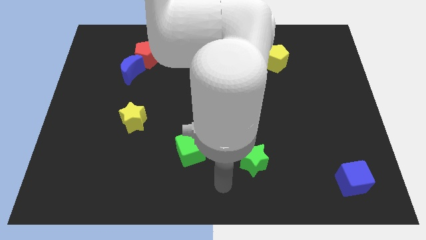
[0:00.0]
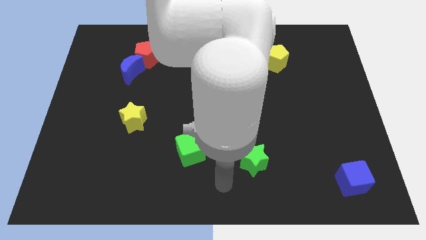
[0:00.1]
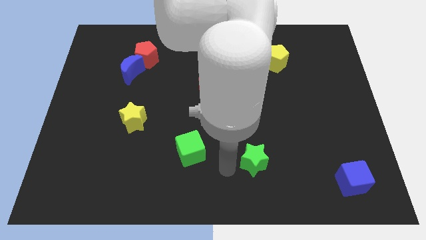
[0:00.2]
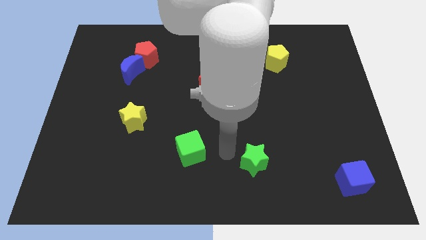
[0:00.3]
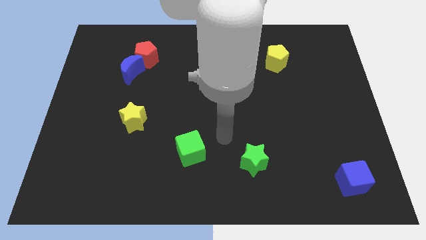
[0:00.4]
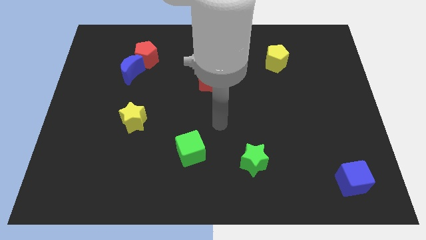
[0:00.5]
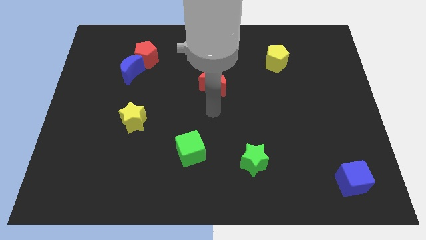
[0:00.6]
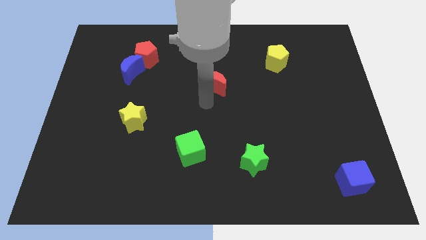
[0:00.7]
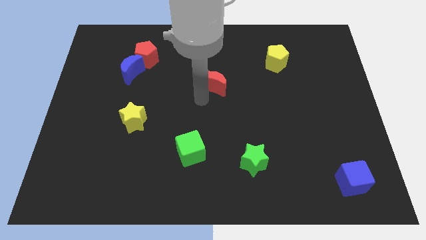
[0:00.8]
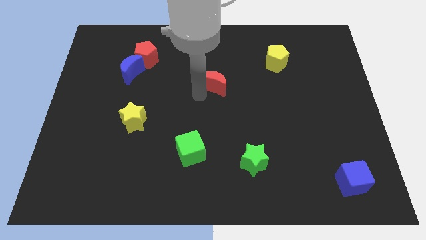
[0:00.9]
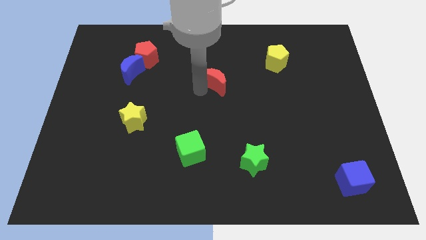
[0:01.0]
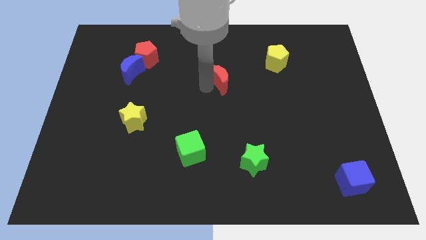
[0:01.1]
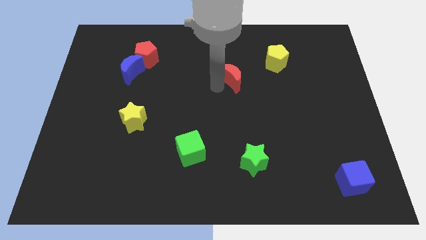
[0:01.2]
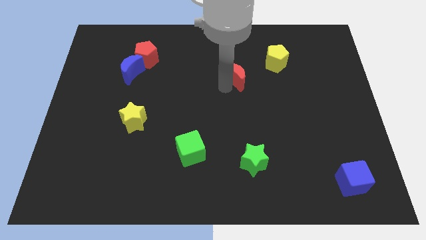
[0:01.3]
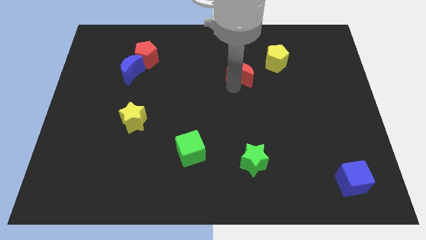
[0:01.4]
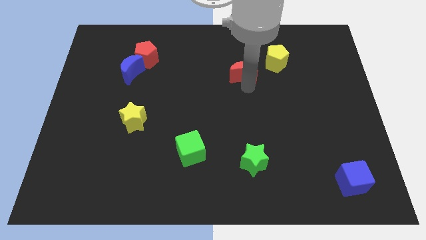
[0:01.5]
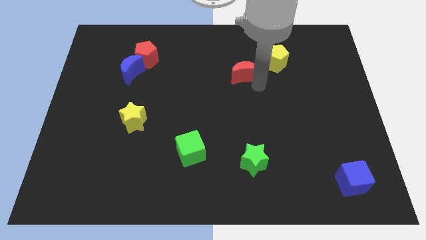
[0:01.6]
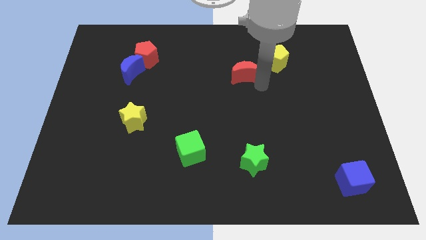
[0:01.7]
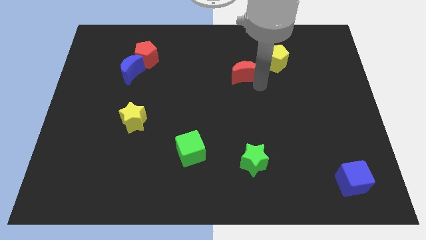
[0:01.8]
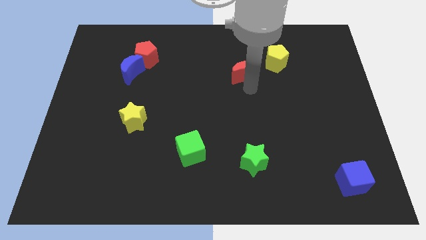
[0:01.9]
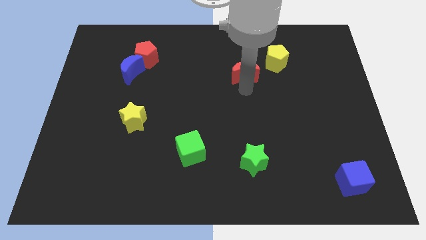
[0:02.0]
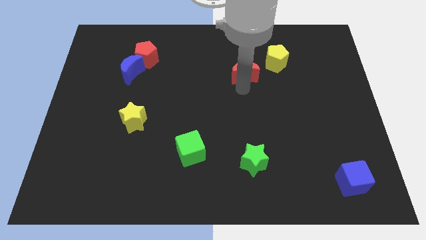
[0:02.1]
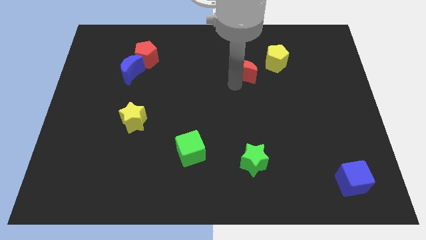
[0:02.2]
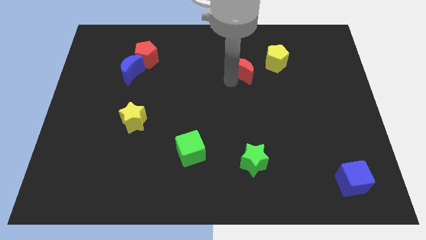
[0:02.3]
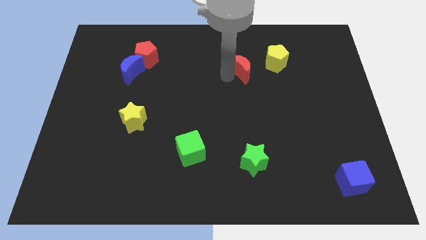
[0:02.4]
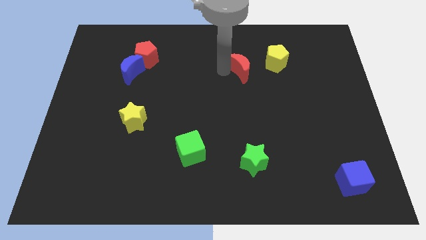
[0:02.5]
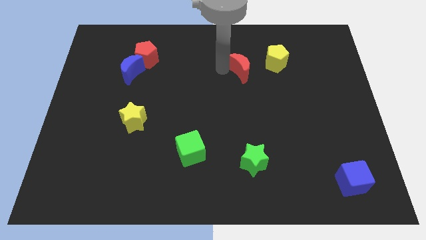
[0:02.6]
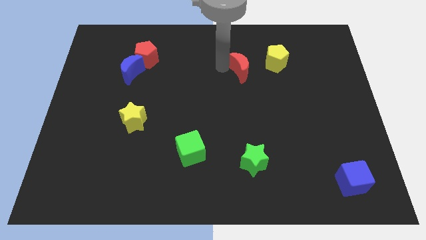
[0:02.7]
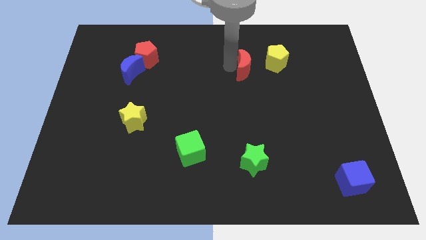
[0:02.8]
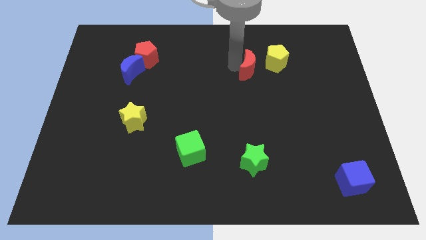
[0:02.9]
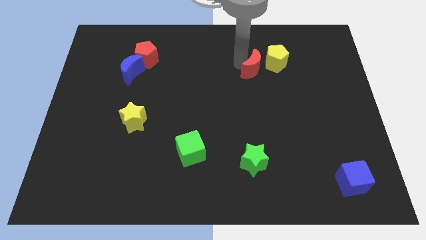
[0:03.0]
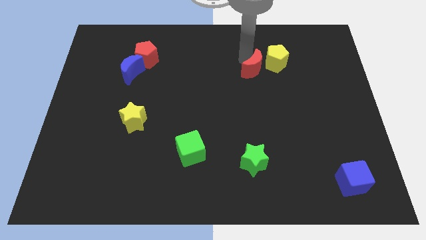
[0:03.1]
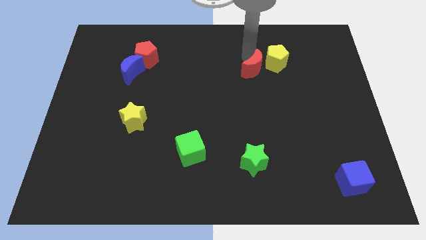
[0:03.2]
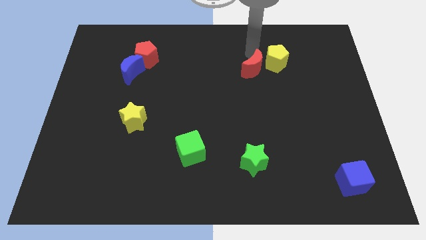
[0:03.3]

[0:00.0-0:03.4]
move the red crescent close to the left side of the yellow pentagon

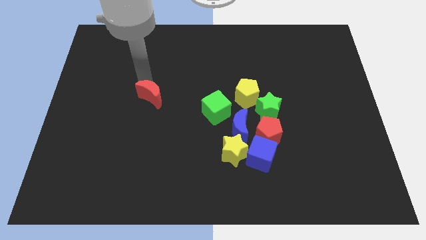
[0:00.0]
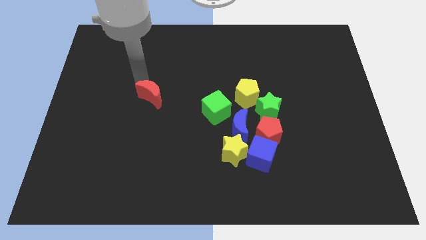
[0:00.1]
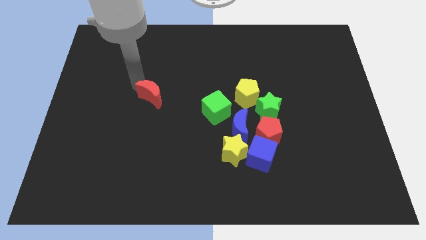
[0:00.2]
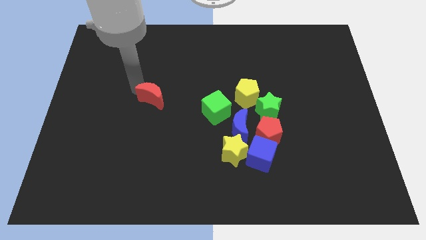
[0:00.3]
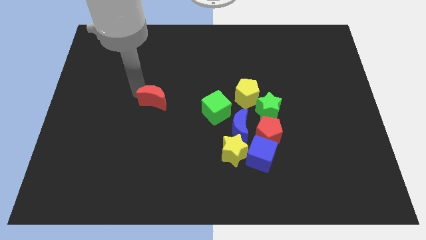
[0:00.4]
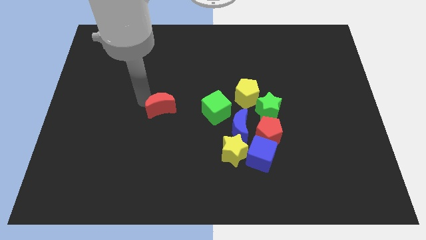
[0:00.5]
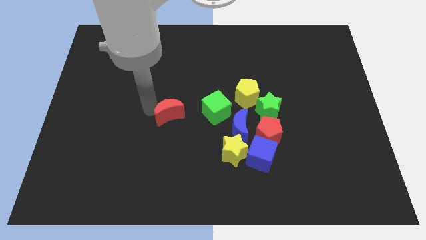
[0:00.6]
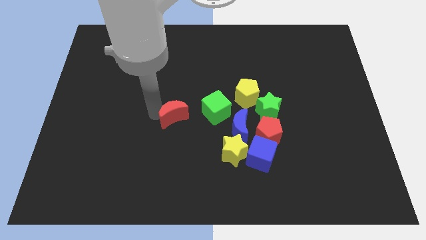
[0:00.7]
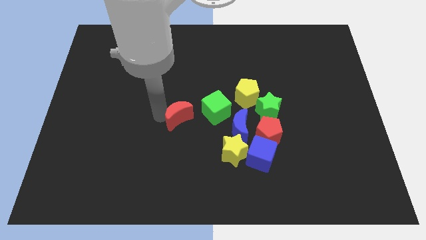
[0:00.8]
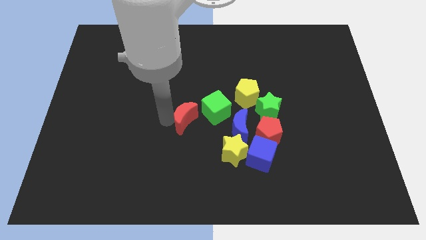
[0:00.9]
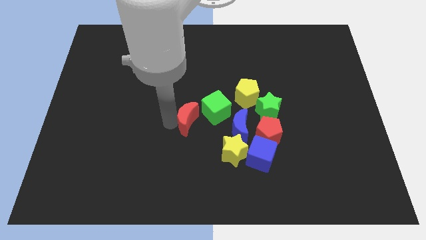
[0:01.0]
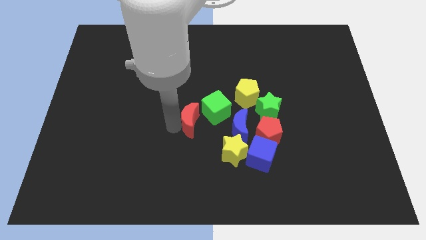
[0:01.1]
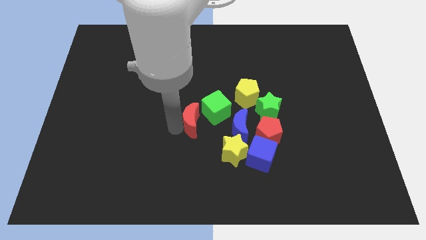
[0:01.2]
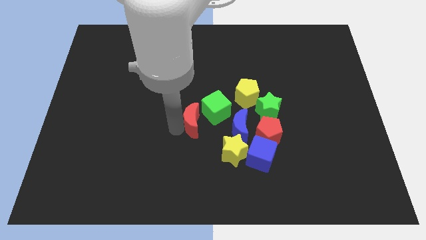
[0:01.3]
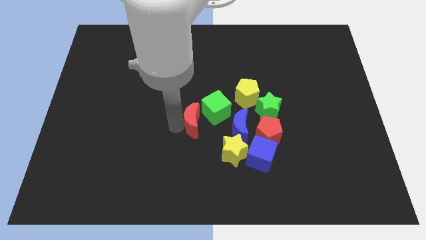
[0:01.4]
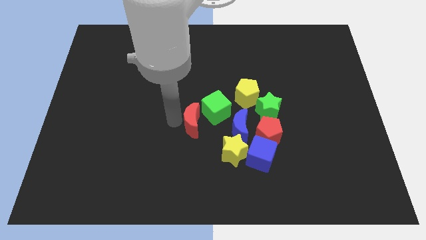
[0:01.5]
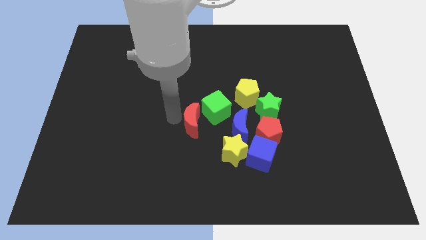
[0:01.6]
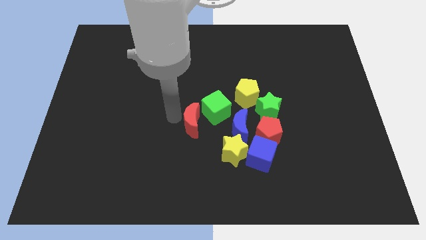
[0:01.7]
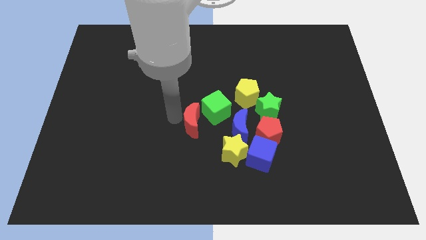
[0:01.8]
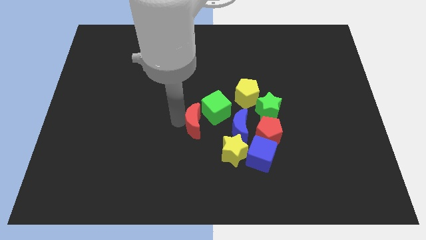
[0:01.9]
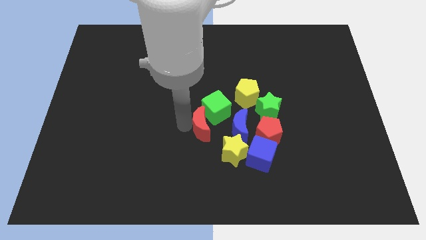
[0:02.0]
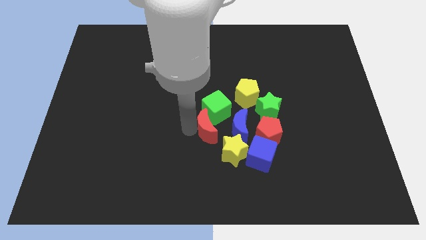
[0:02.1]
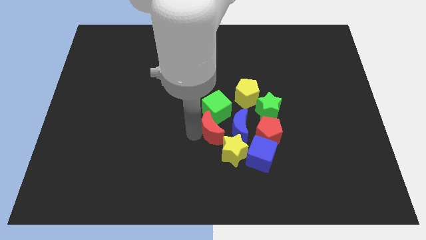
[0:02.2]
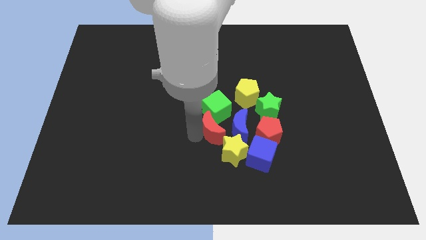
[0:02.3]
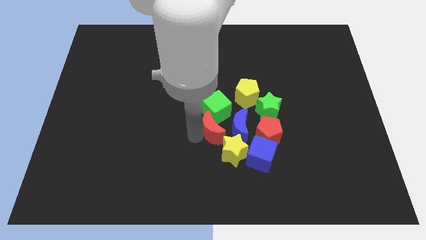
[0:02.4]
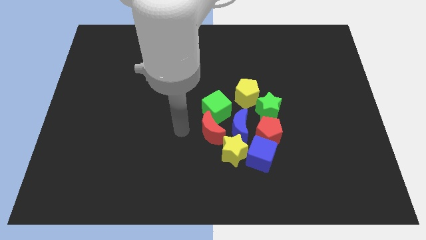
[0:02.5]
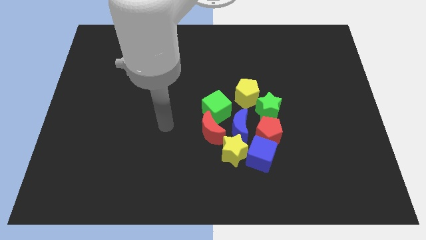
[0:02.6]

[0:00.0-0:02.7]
place red moon below green cube

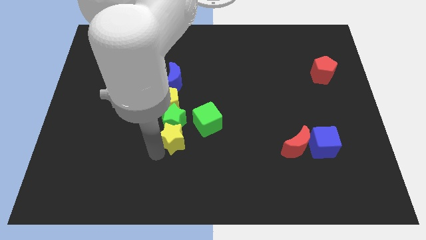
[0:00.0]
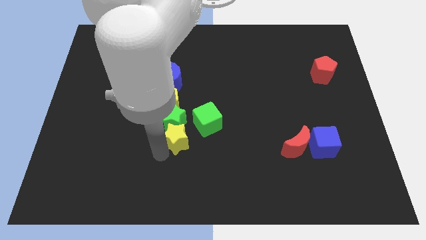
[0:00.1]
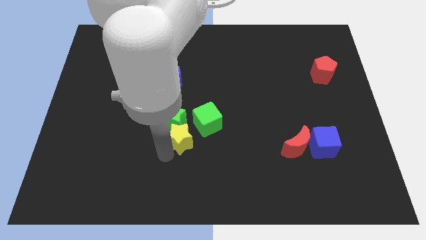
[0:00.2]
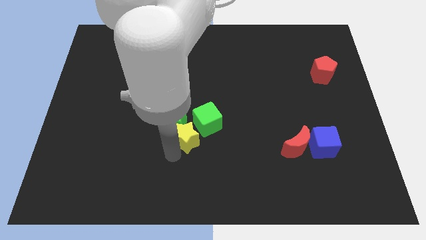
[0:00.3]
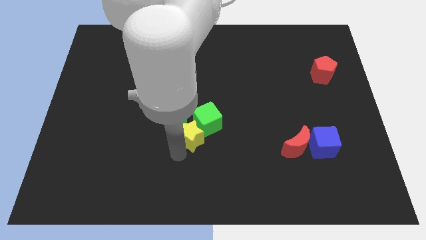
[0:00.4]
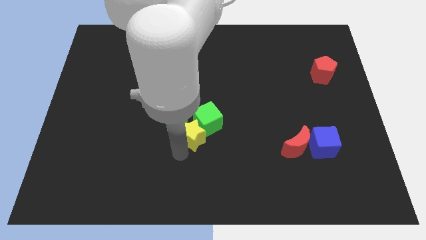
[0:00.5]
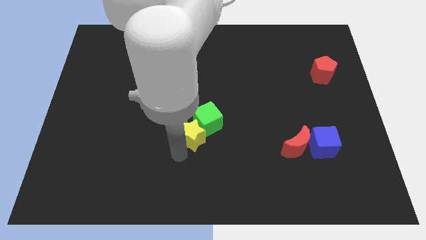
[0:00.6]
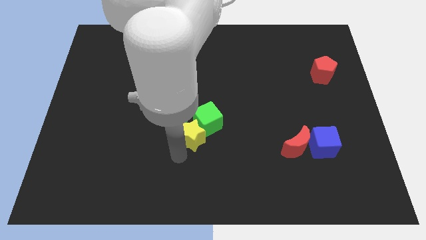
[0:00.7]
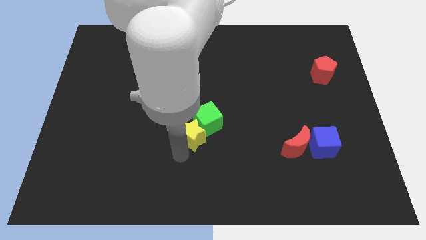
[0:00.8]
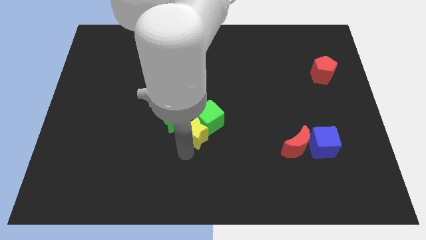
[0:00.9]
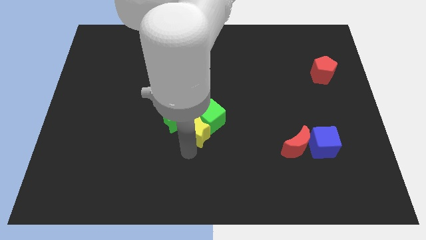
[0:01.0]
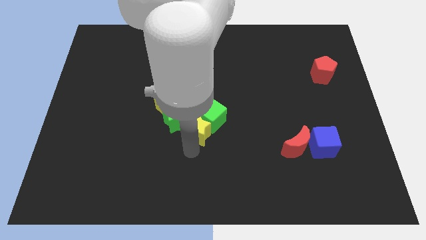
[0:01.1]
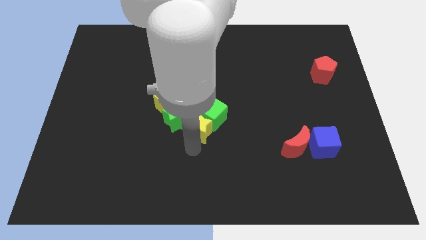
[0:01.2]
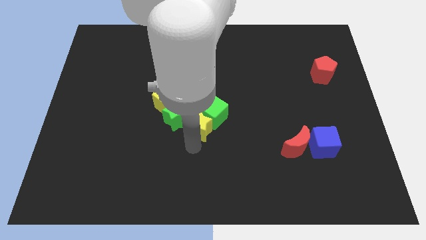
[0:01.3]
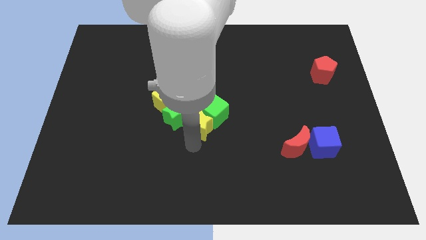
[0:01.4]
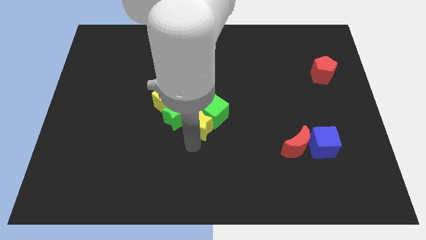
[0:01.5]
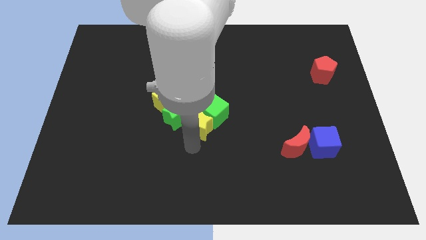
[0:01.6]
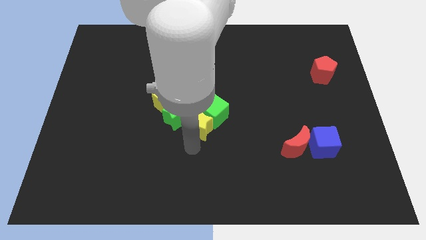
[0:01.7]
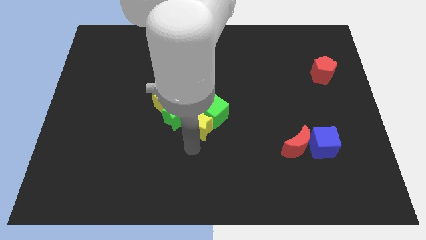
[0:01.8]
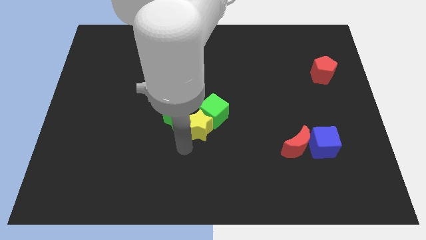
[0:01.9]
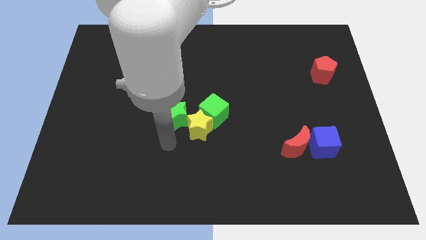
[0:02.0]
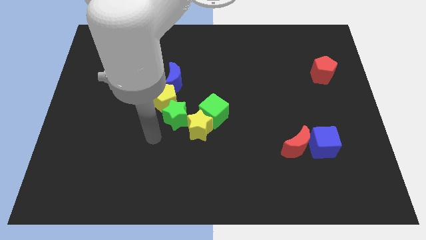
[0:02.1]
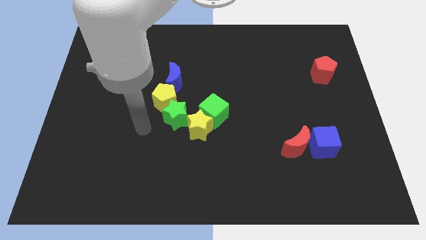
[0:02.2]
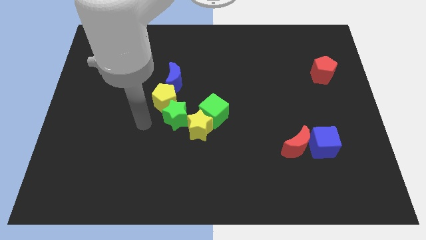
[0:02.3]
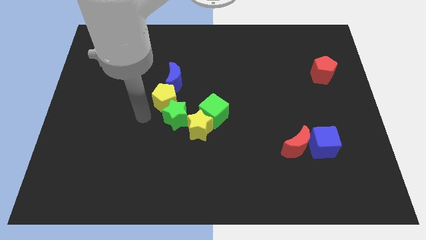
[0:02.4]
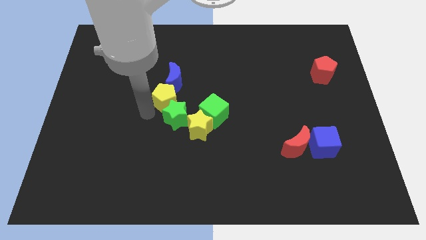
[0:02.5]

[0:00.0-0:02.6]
move green star and green cube with the yellow star towards the centre

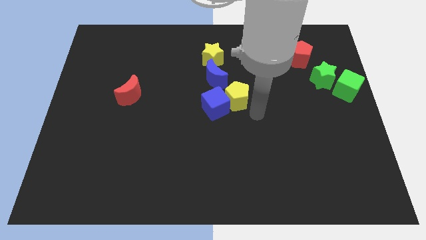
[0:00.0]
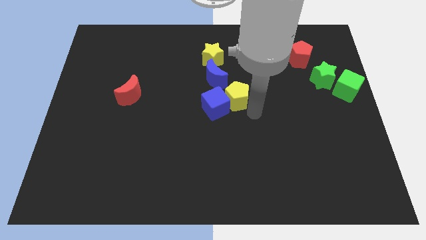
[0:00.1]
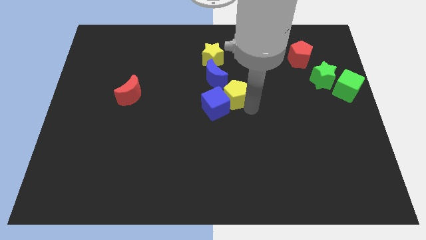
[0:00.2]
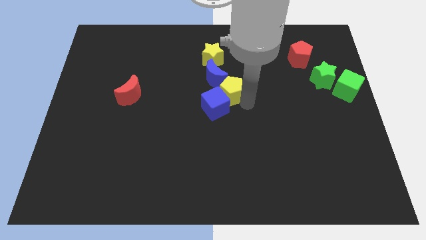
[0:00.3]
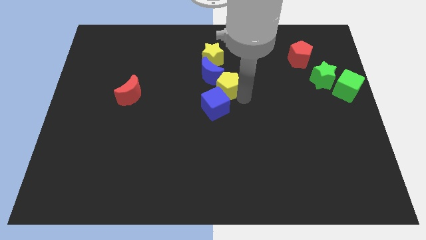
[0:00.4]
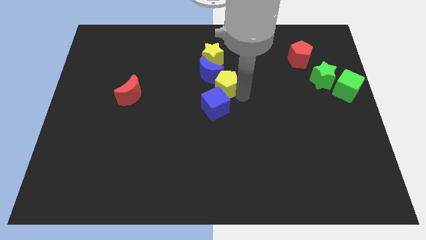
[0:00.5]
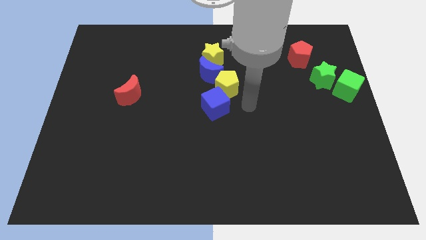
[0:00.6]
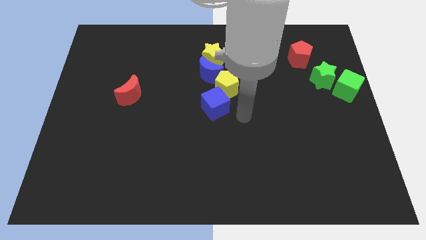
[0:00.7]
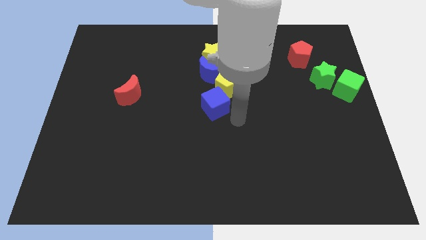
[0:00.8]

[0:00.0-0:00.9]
push the yellow pentagon between blue moon and blue cube
